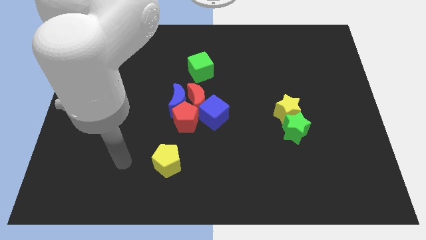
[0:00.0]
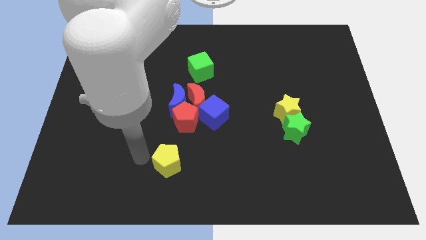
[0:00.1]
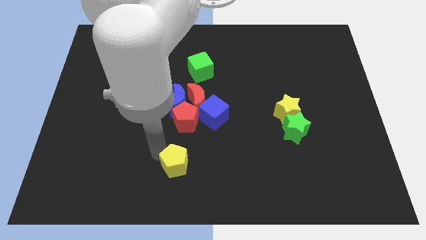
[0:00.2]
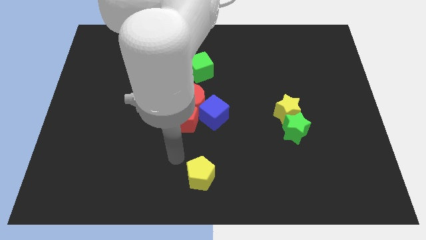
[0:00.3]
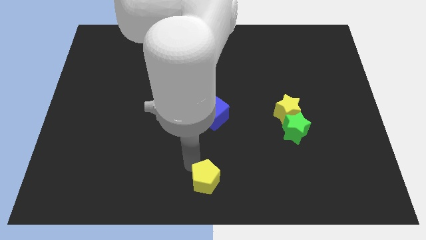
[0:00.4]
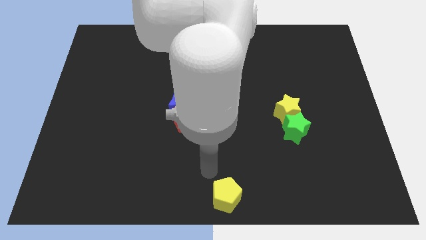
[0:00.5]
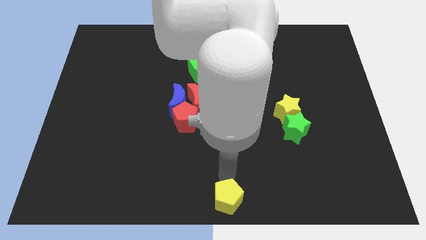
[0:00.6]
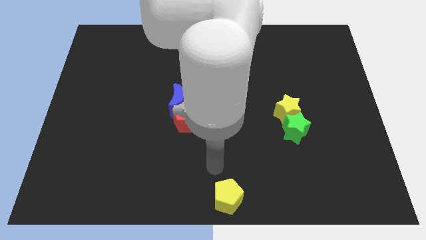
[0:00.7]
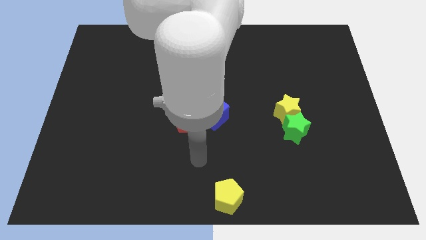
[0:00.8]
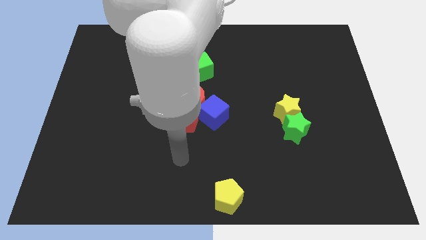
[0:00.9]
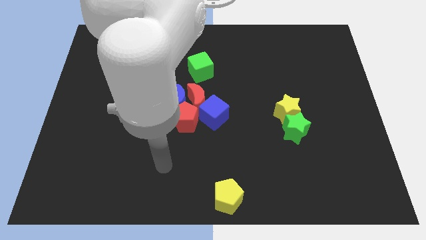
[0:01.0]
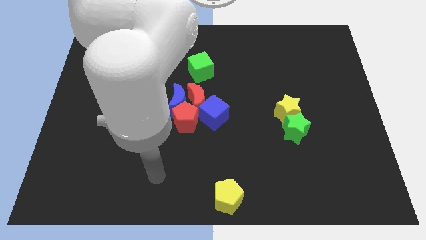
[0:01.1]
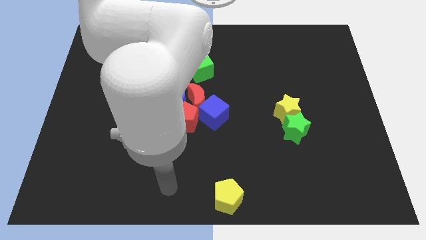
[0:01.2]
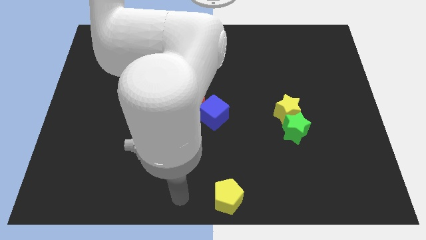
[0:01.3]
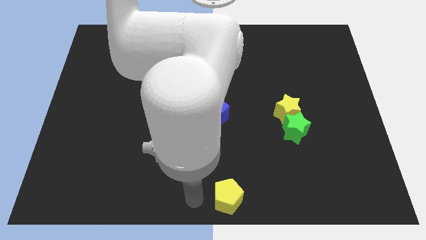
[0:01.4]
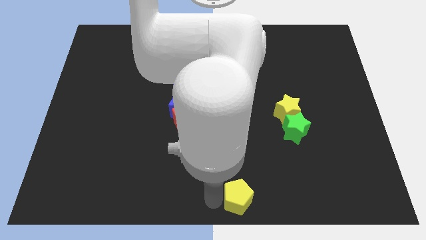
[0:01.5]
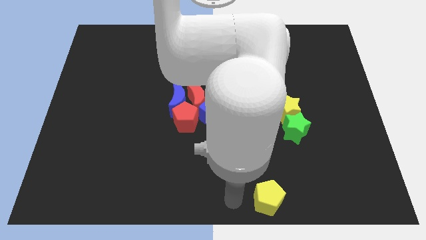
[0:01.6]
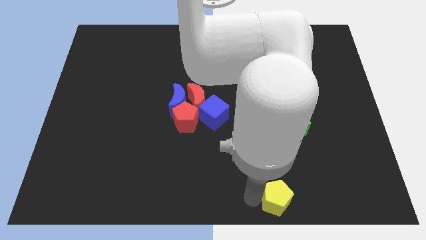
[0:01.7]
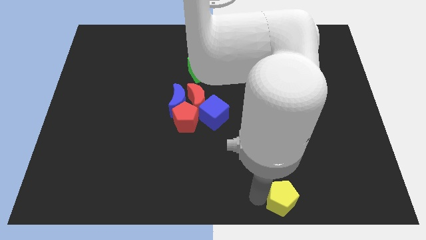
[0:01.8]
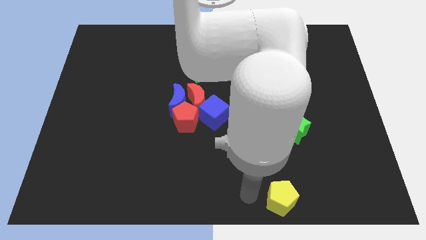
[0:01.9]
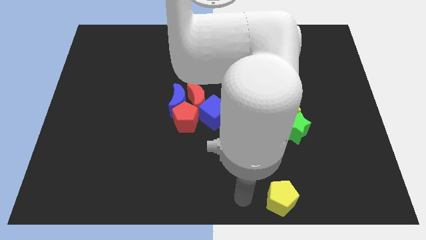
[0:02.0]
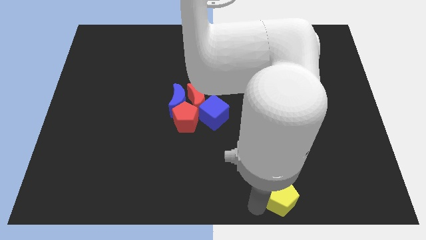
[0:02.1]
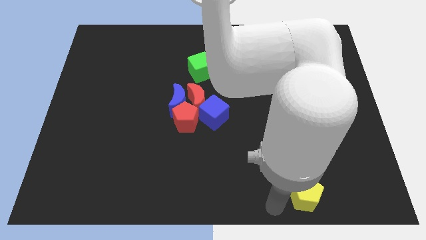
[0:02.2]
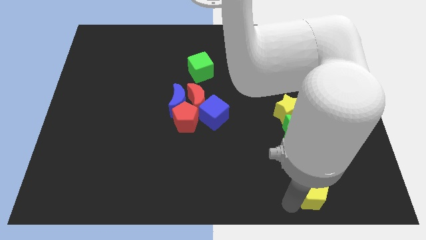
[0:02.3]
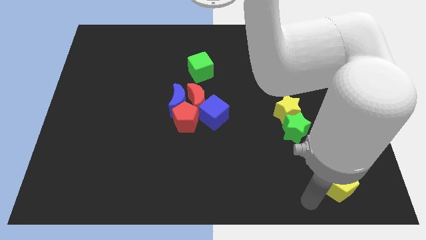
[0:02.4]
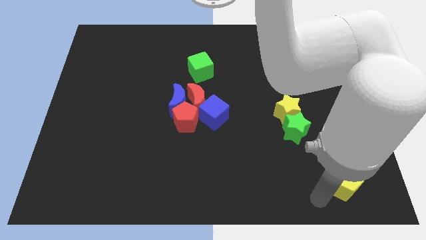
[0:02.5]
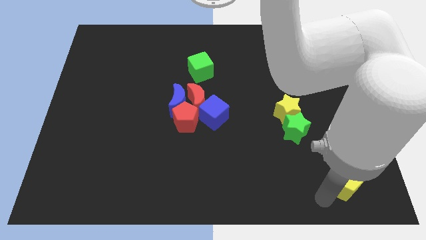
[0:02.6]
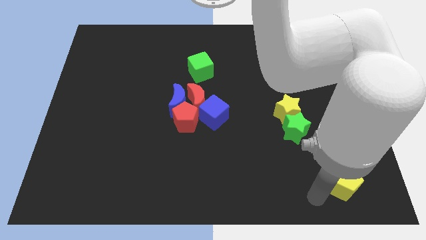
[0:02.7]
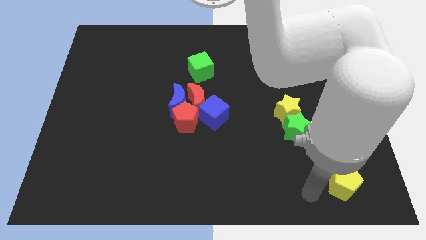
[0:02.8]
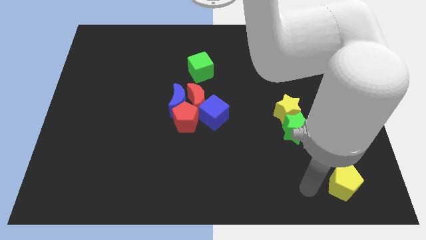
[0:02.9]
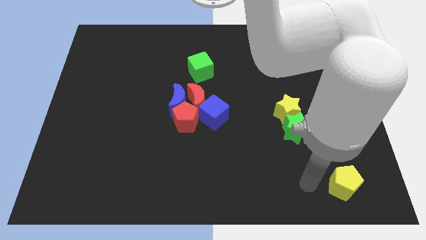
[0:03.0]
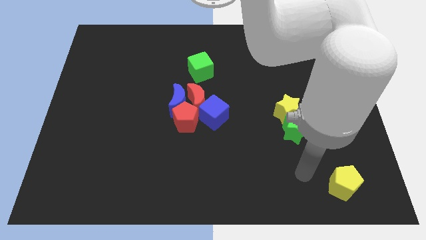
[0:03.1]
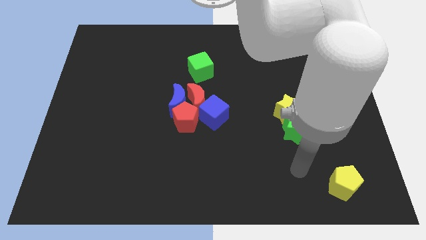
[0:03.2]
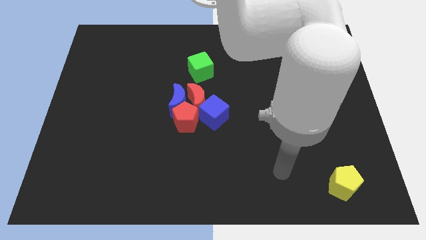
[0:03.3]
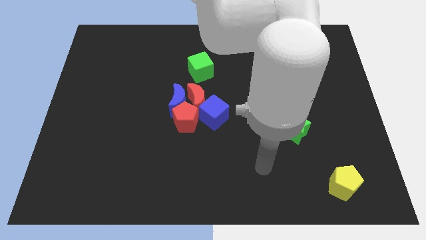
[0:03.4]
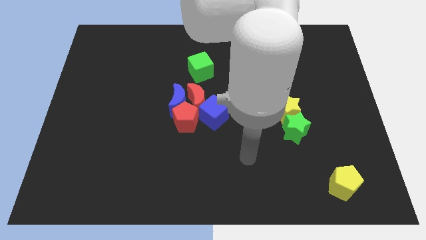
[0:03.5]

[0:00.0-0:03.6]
push the yellow pentagon to the bottom right of the board

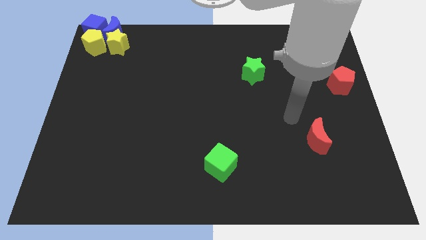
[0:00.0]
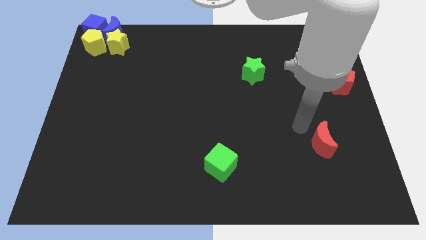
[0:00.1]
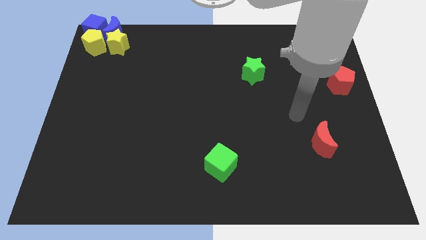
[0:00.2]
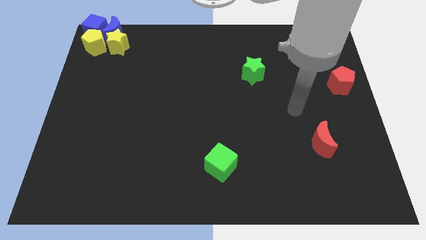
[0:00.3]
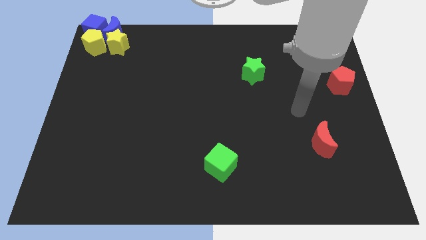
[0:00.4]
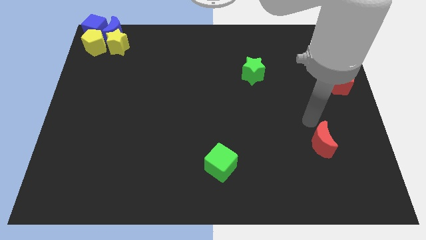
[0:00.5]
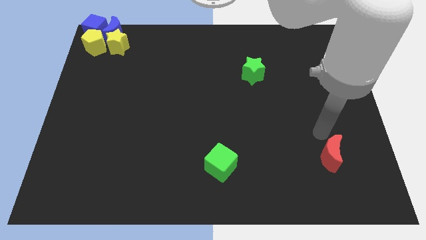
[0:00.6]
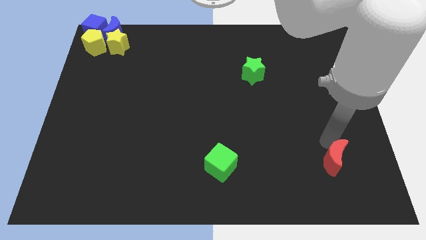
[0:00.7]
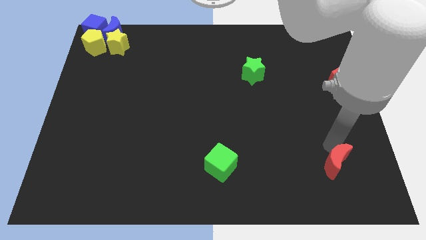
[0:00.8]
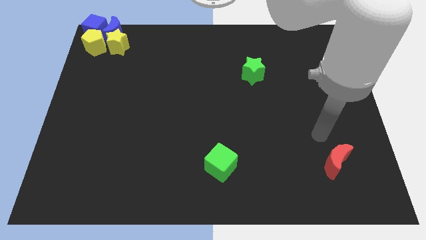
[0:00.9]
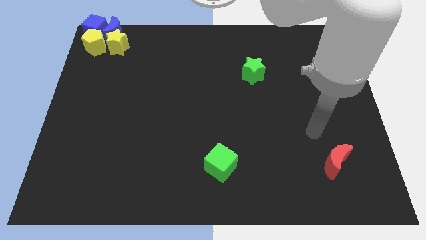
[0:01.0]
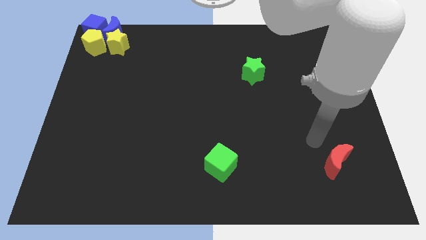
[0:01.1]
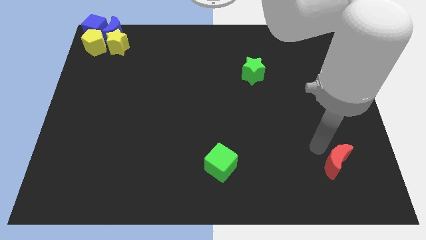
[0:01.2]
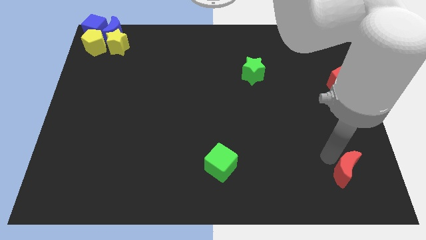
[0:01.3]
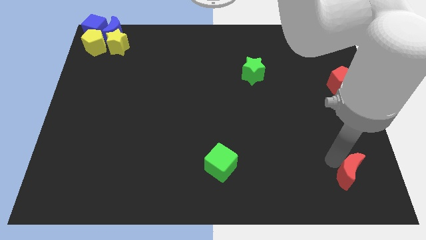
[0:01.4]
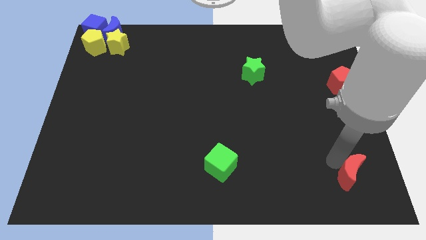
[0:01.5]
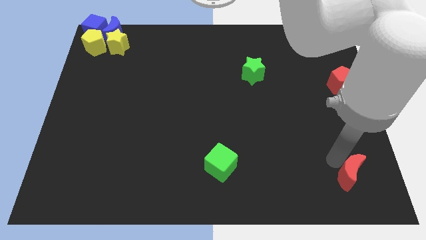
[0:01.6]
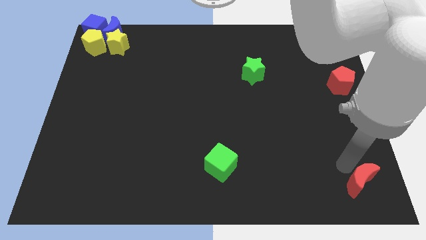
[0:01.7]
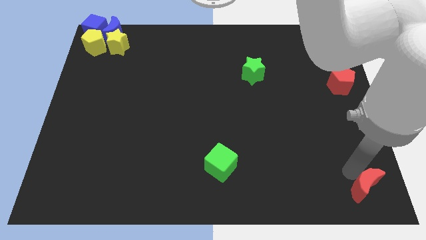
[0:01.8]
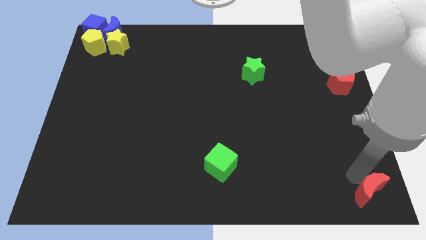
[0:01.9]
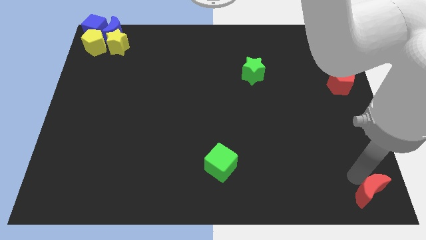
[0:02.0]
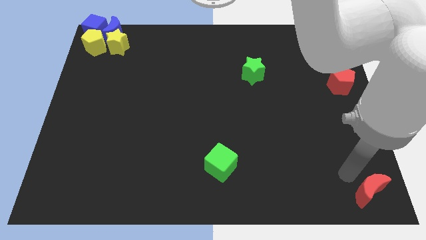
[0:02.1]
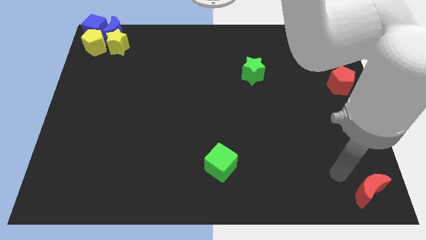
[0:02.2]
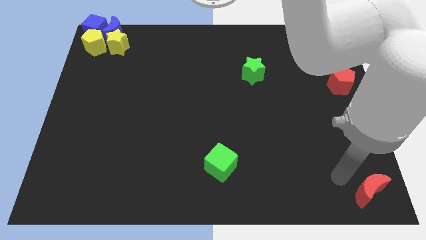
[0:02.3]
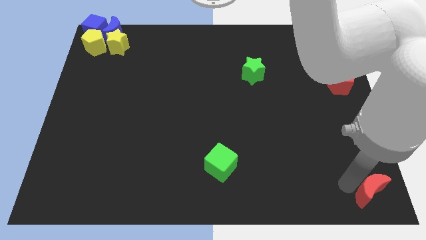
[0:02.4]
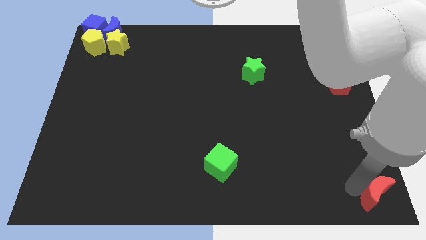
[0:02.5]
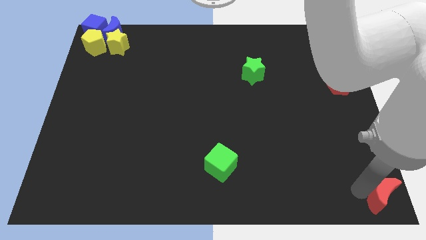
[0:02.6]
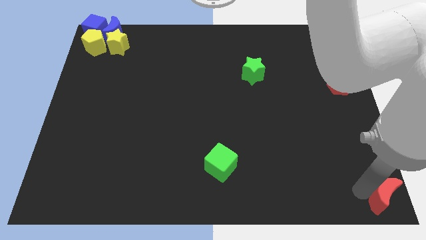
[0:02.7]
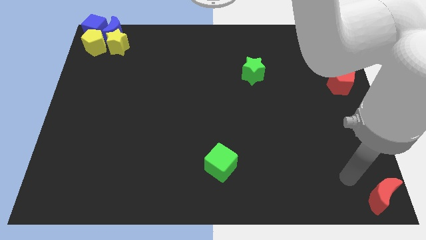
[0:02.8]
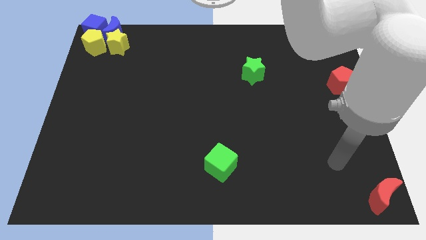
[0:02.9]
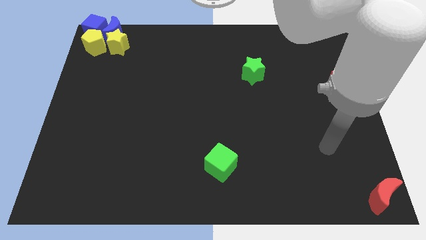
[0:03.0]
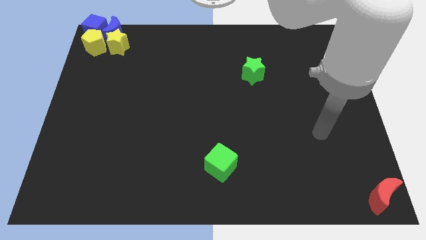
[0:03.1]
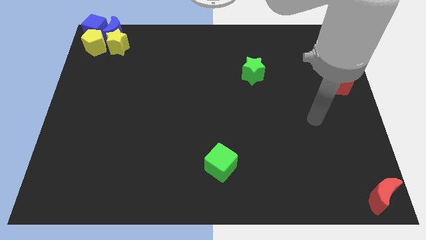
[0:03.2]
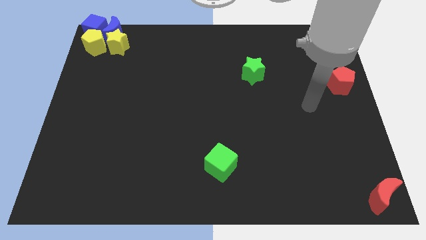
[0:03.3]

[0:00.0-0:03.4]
place the red moon at the bottom right corner of the board

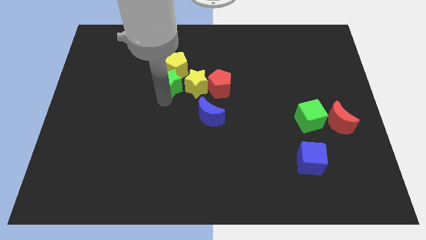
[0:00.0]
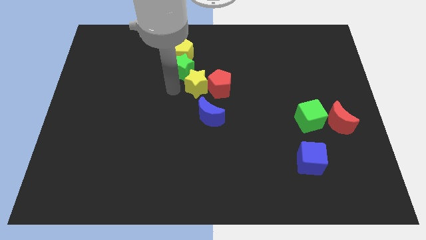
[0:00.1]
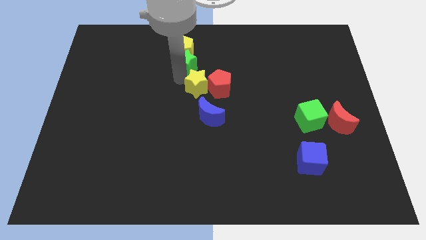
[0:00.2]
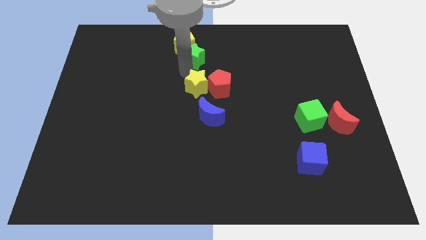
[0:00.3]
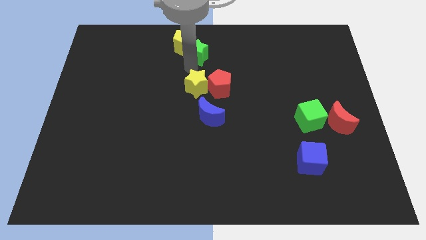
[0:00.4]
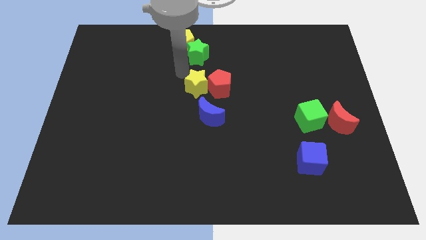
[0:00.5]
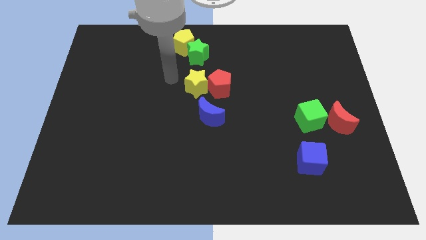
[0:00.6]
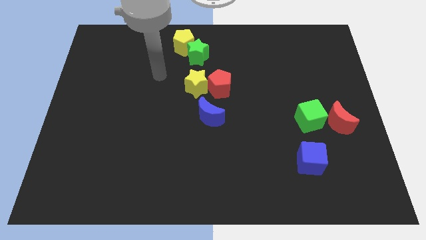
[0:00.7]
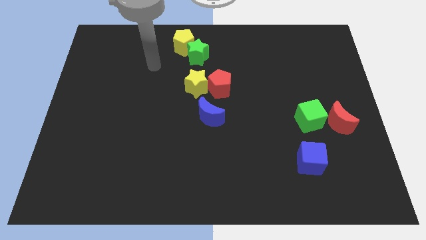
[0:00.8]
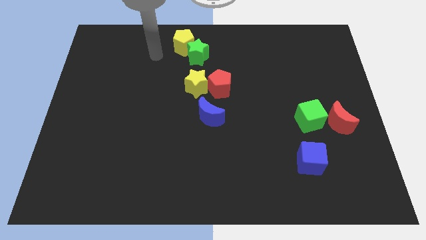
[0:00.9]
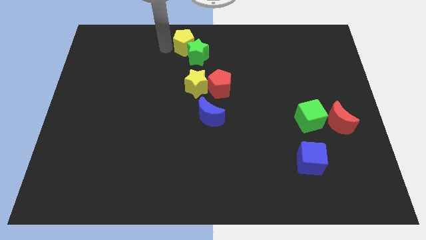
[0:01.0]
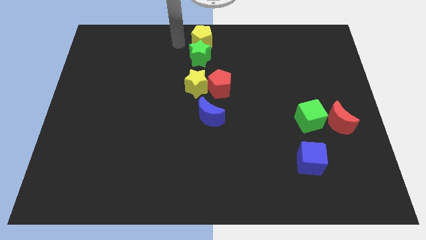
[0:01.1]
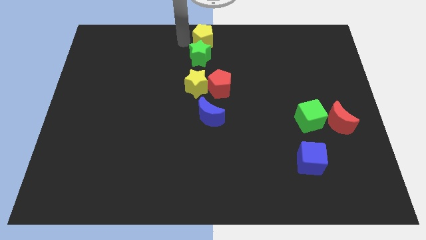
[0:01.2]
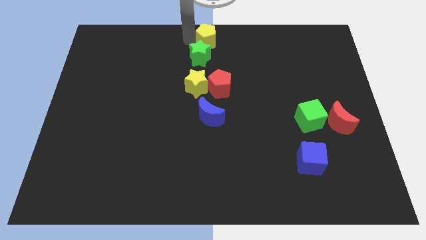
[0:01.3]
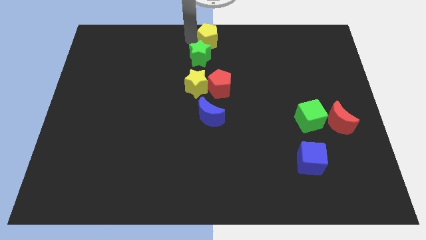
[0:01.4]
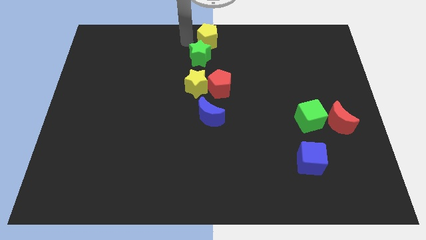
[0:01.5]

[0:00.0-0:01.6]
place the yellow pentagon above the green star

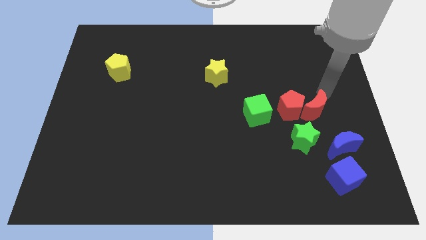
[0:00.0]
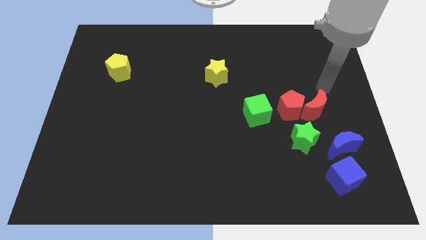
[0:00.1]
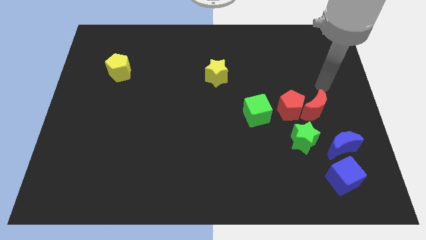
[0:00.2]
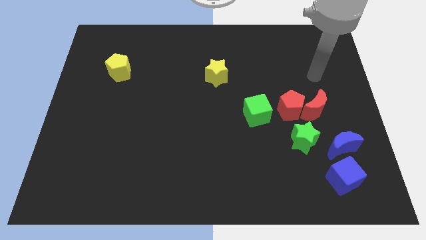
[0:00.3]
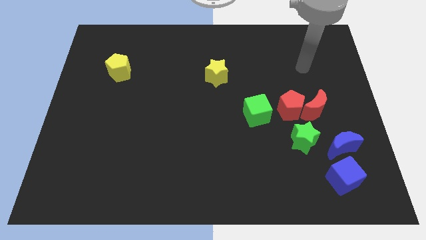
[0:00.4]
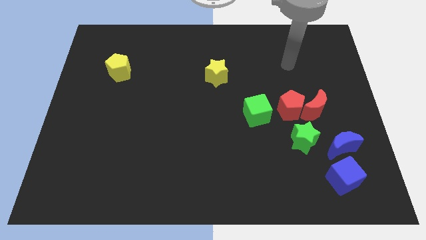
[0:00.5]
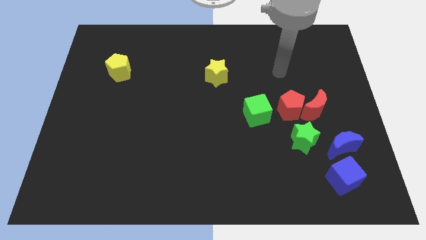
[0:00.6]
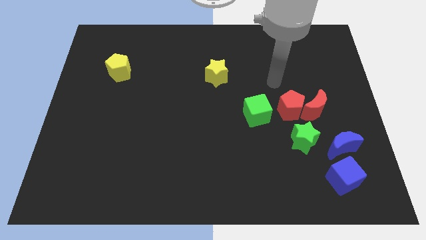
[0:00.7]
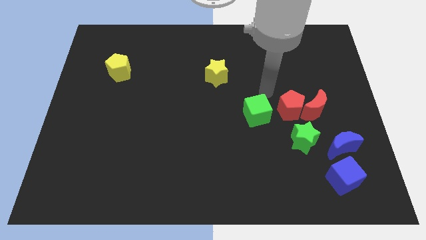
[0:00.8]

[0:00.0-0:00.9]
place arm on the top of green cube
